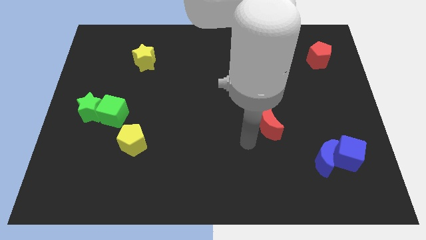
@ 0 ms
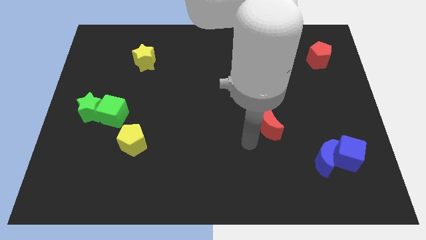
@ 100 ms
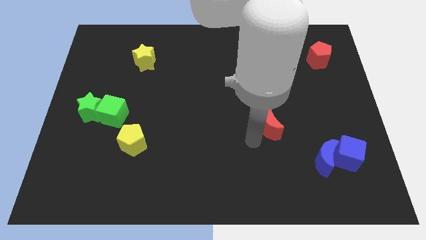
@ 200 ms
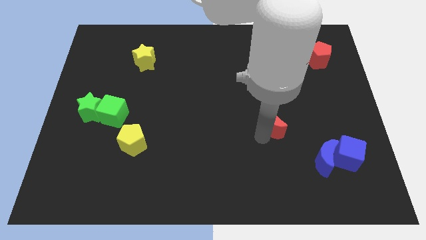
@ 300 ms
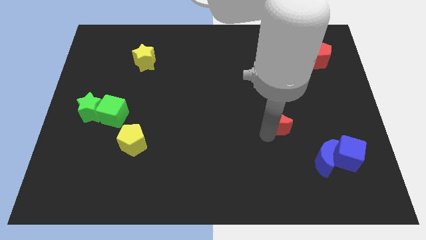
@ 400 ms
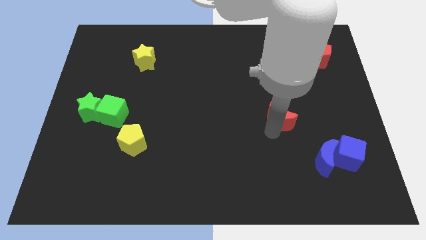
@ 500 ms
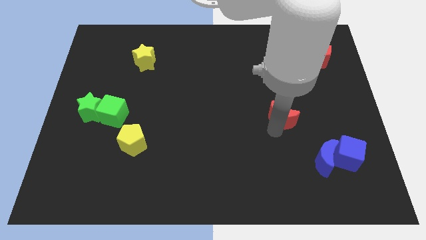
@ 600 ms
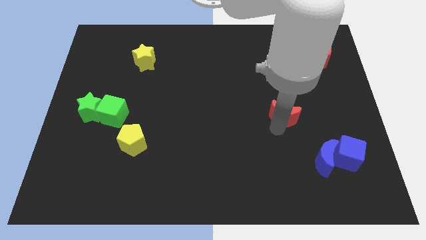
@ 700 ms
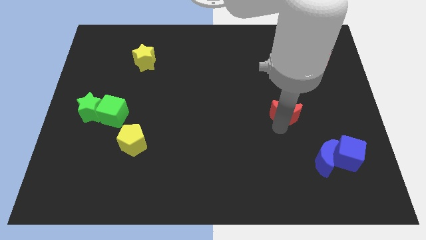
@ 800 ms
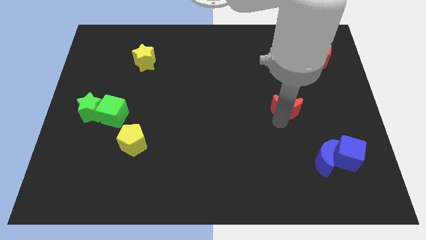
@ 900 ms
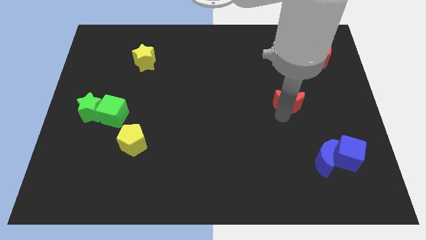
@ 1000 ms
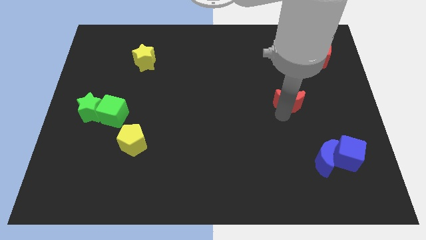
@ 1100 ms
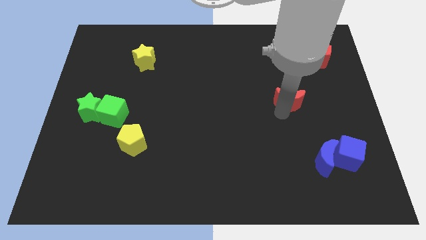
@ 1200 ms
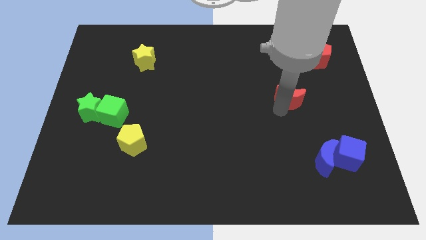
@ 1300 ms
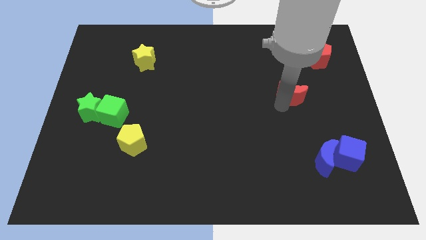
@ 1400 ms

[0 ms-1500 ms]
move the red crescent towards the red pentagon

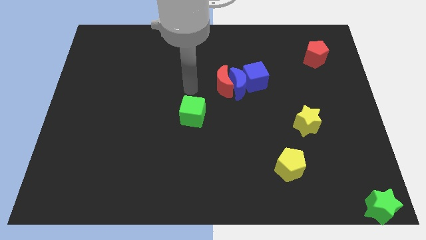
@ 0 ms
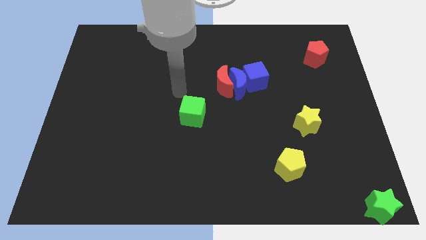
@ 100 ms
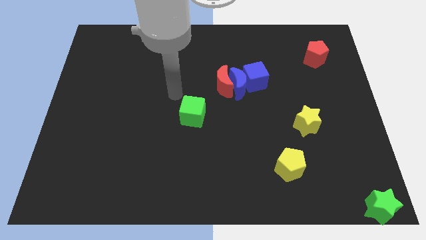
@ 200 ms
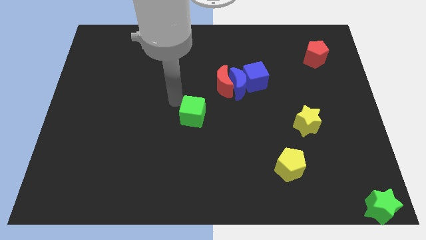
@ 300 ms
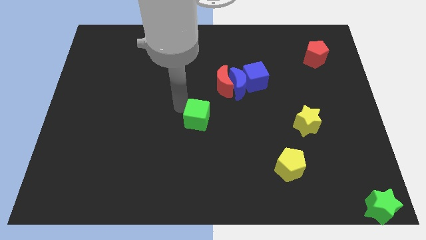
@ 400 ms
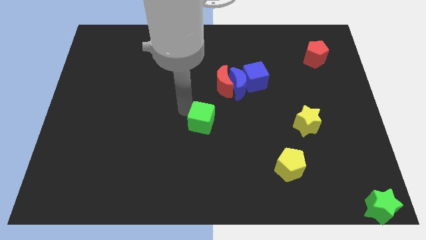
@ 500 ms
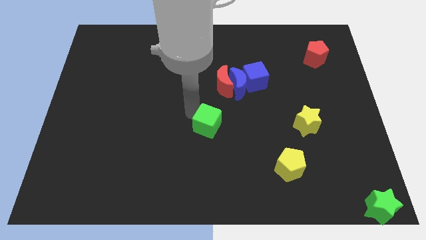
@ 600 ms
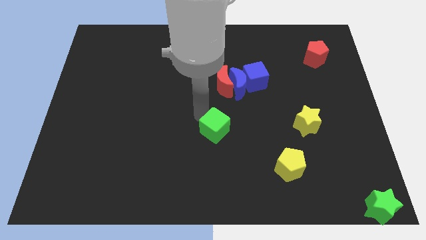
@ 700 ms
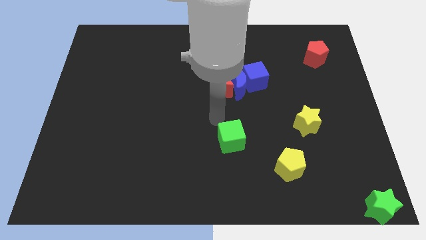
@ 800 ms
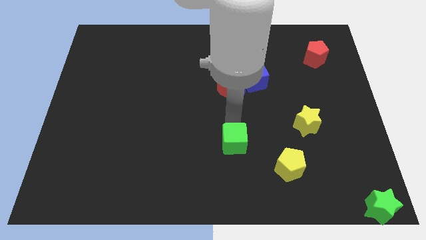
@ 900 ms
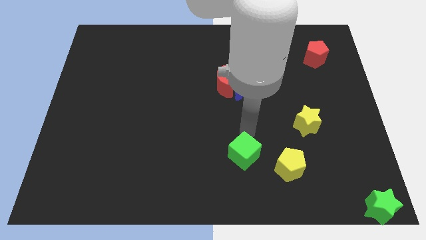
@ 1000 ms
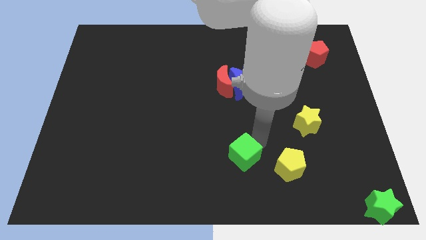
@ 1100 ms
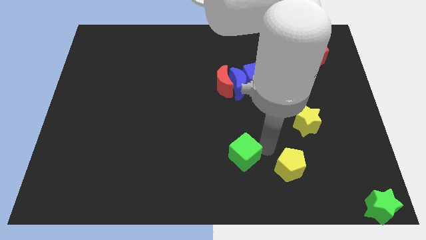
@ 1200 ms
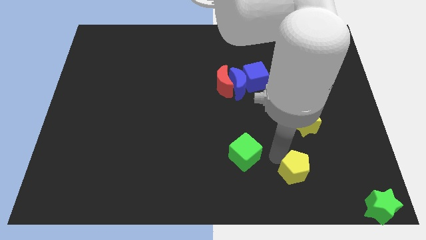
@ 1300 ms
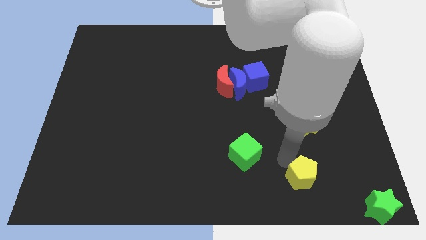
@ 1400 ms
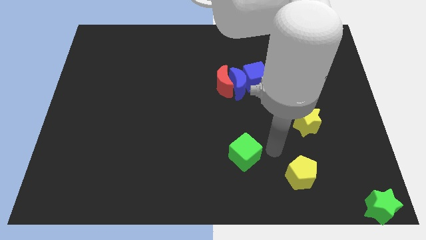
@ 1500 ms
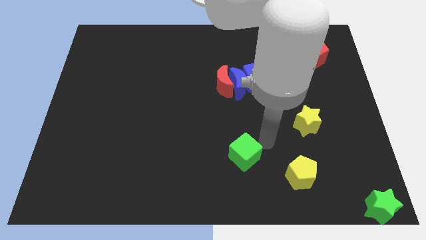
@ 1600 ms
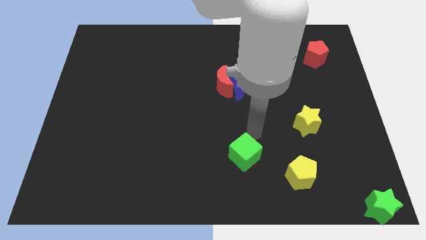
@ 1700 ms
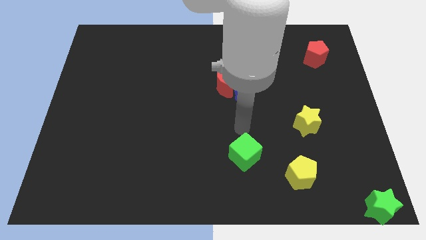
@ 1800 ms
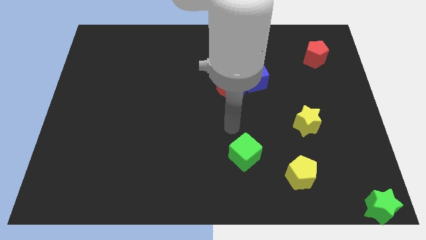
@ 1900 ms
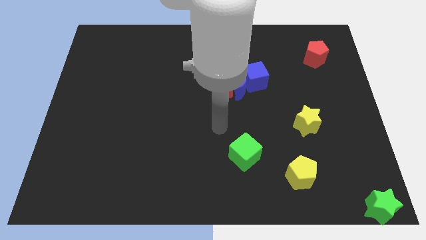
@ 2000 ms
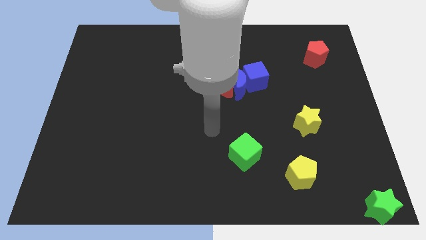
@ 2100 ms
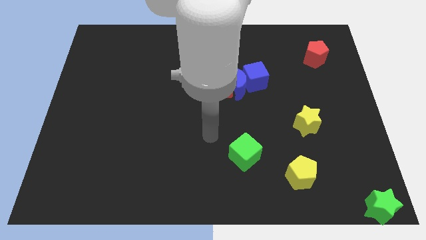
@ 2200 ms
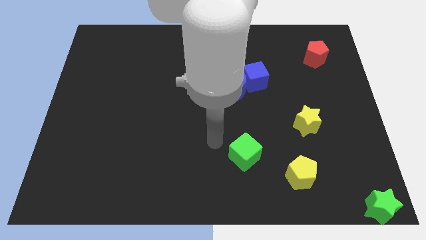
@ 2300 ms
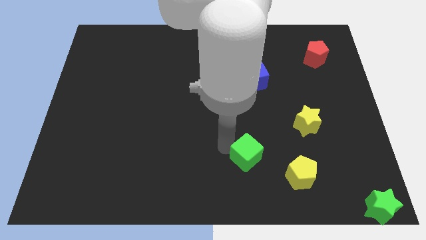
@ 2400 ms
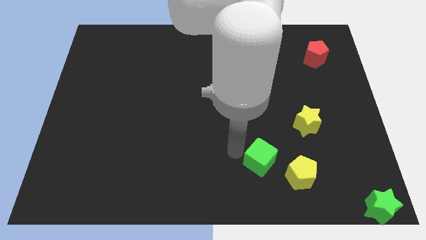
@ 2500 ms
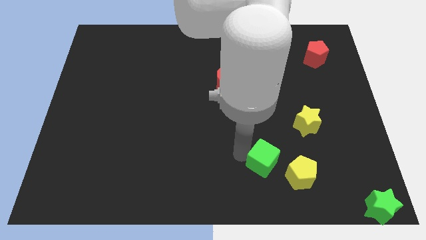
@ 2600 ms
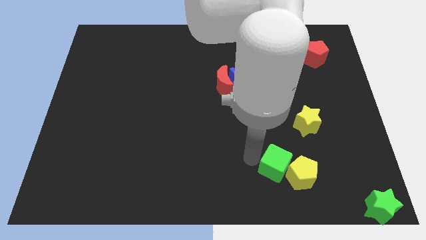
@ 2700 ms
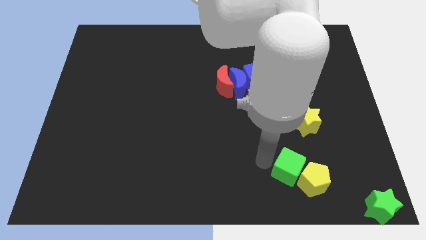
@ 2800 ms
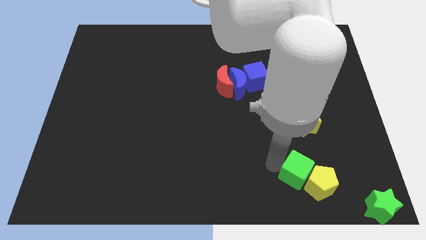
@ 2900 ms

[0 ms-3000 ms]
push the green cube into to the yellow pentagon

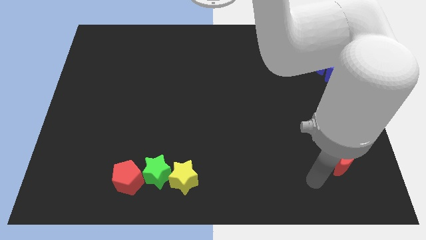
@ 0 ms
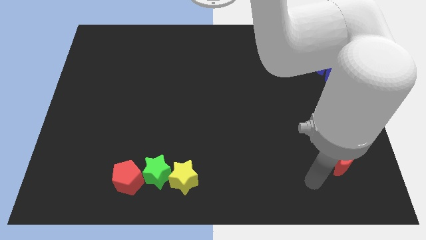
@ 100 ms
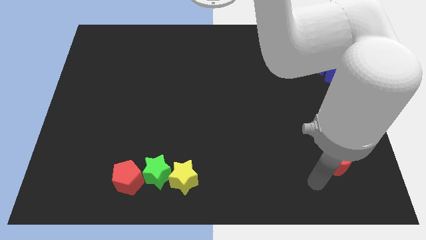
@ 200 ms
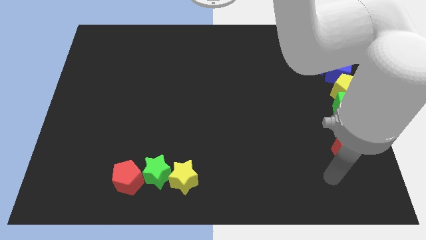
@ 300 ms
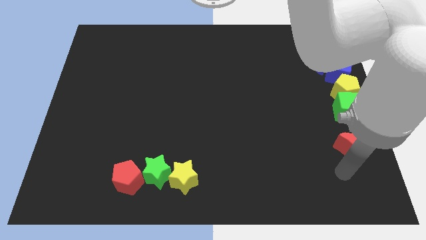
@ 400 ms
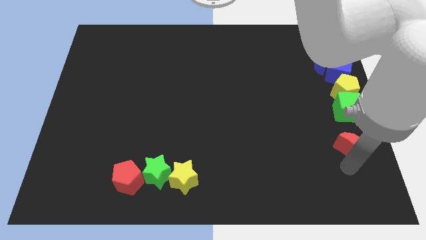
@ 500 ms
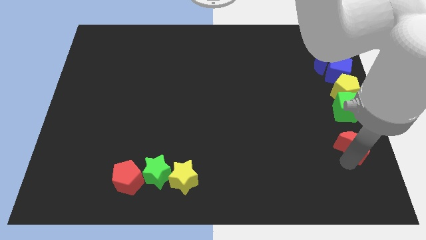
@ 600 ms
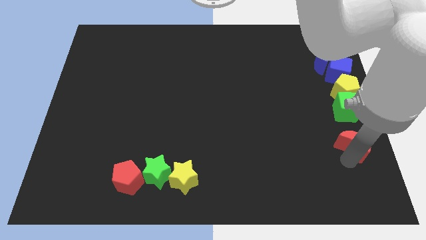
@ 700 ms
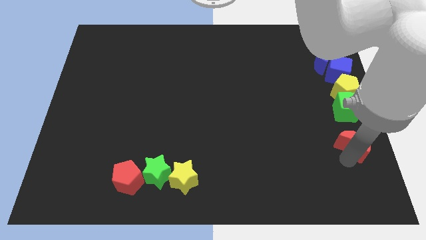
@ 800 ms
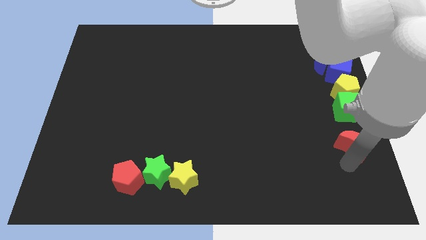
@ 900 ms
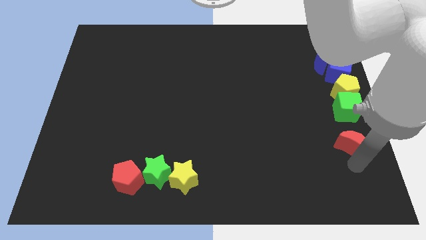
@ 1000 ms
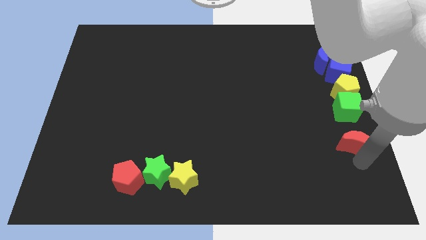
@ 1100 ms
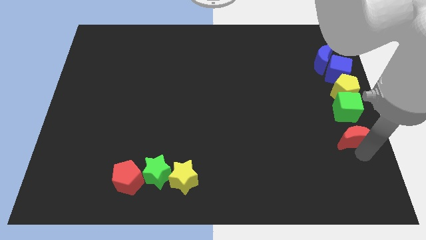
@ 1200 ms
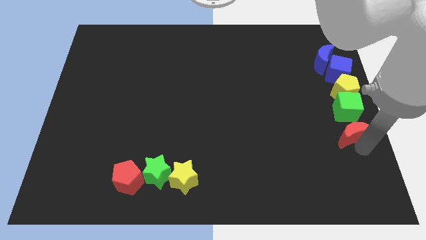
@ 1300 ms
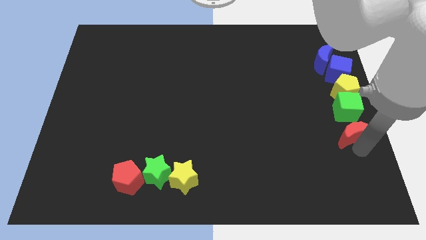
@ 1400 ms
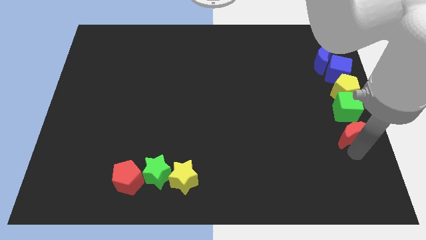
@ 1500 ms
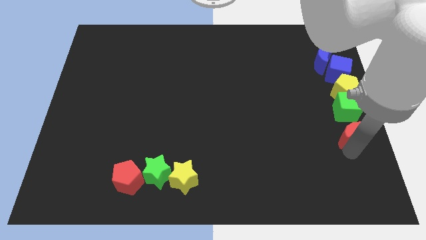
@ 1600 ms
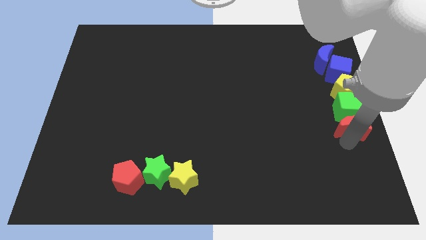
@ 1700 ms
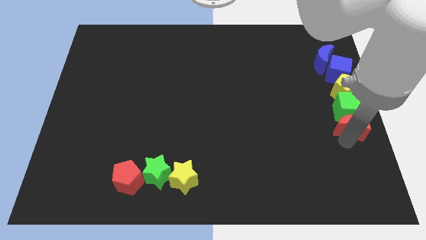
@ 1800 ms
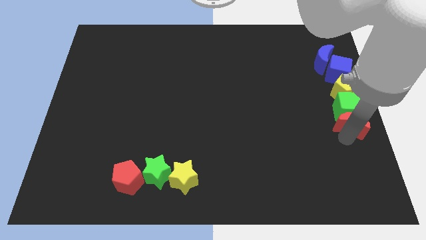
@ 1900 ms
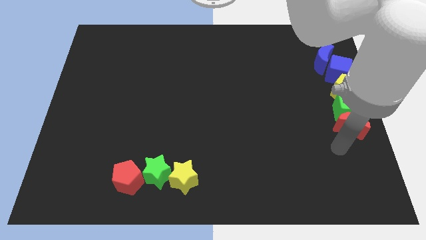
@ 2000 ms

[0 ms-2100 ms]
move the red moon to the bottom side of the green cube

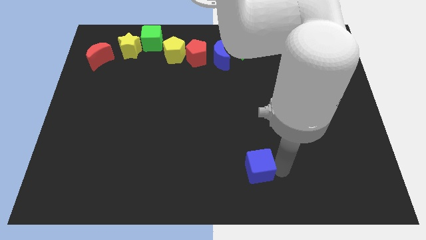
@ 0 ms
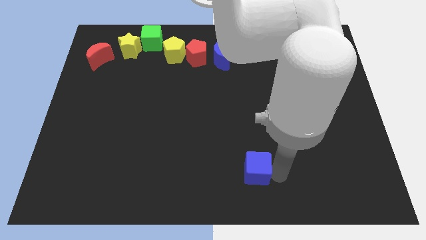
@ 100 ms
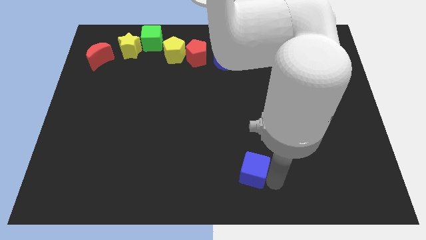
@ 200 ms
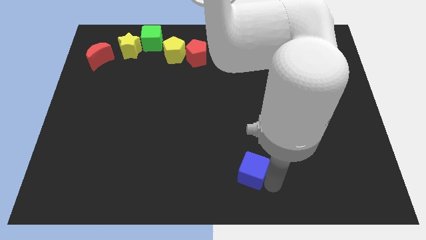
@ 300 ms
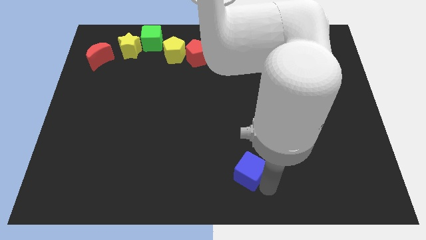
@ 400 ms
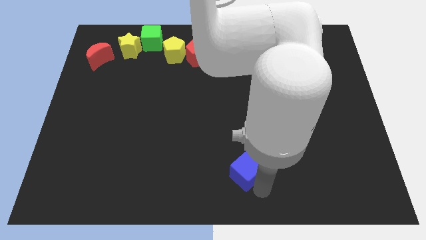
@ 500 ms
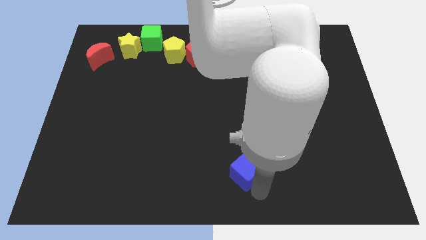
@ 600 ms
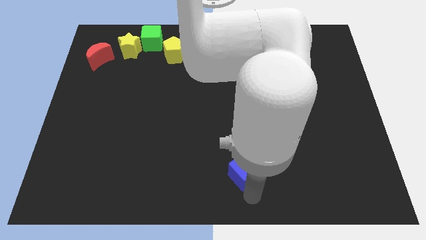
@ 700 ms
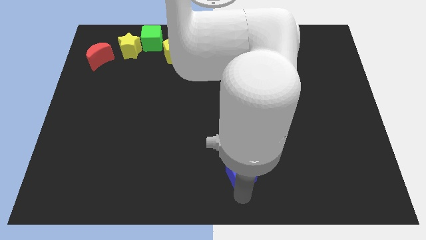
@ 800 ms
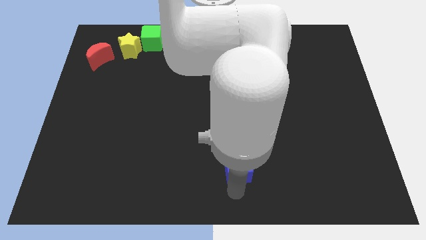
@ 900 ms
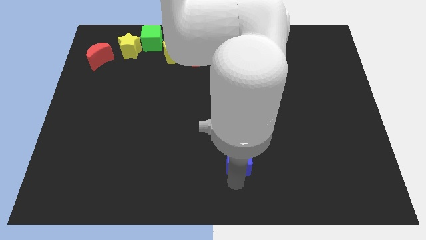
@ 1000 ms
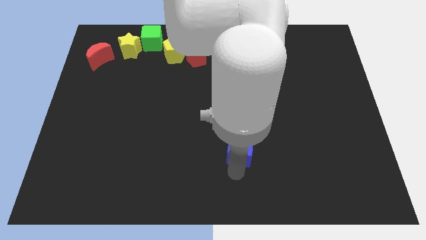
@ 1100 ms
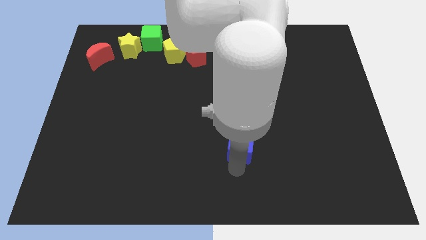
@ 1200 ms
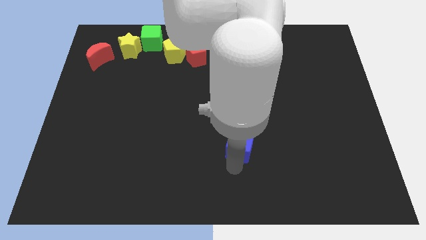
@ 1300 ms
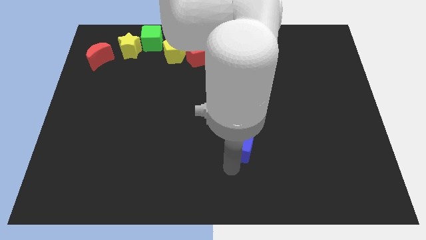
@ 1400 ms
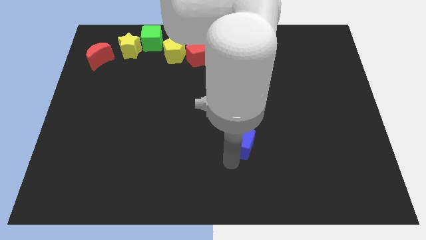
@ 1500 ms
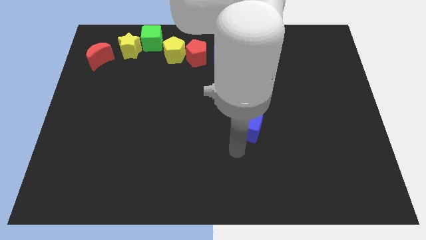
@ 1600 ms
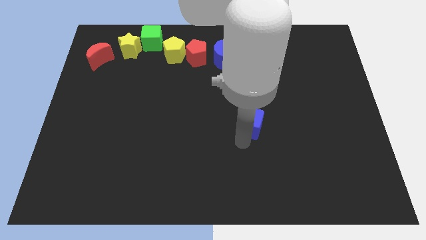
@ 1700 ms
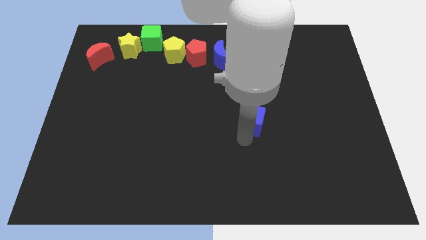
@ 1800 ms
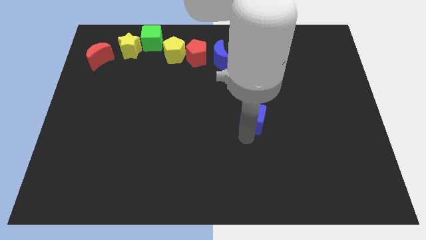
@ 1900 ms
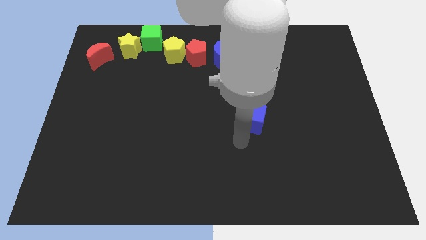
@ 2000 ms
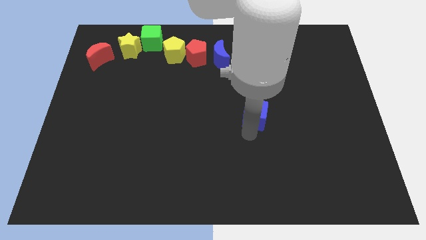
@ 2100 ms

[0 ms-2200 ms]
move the blue cube to the center
